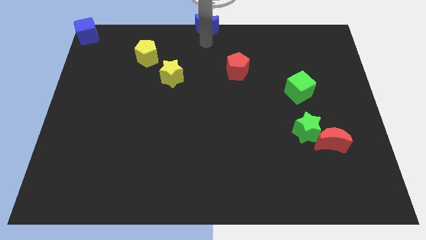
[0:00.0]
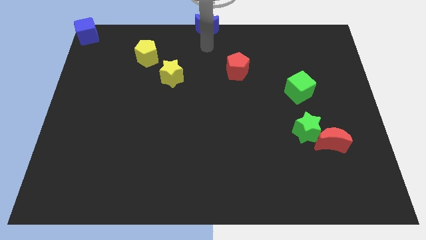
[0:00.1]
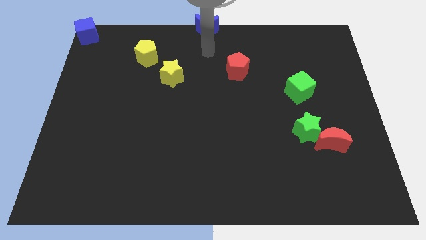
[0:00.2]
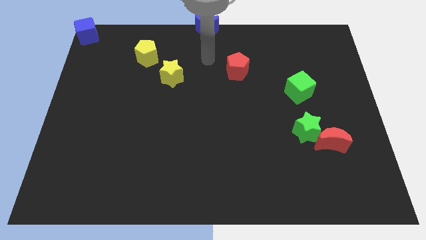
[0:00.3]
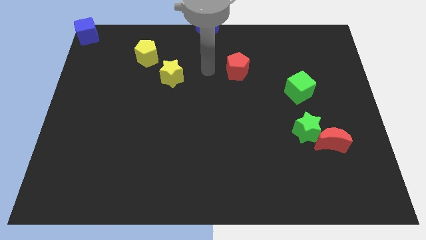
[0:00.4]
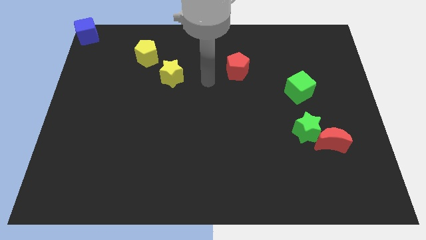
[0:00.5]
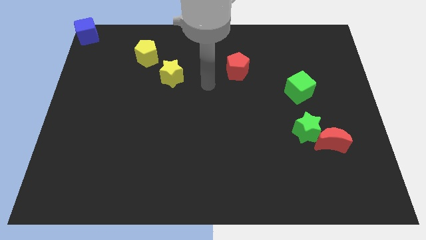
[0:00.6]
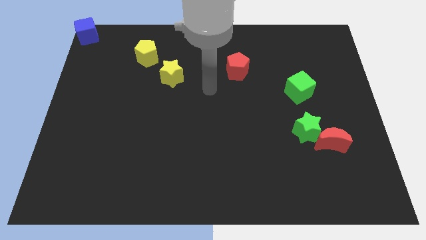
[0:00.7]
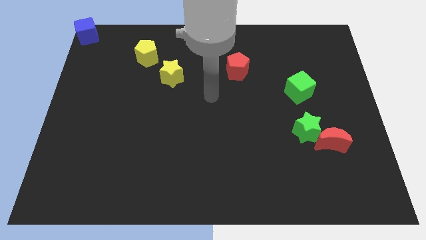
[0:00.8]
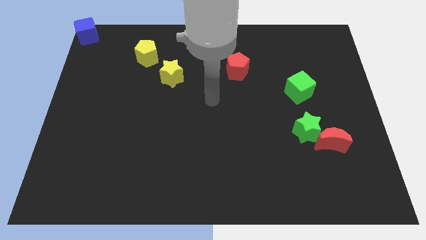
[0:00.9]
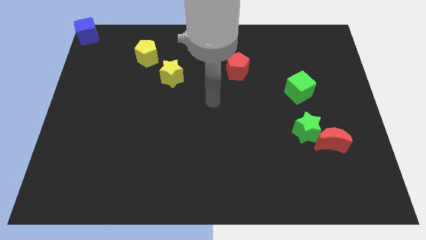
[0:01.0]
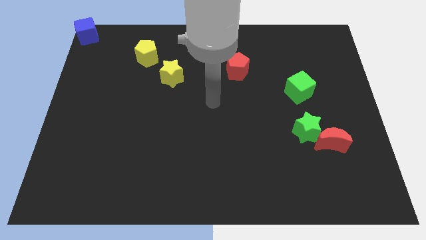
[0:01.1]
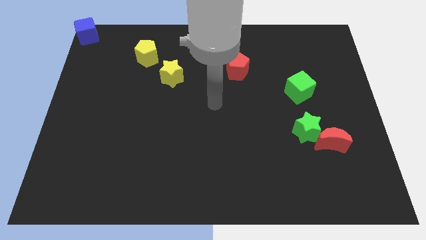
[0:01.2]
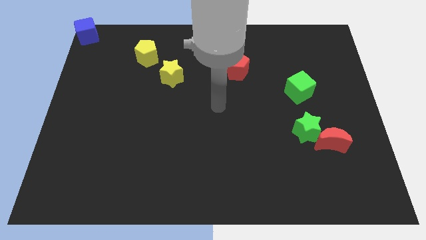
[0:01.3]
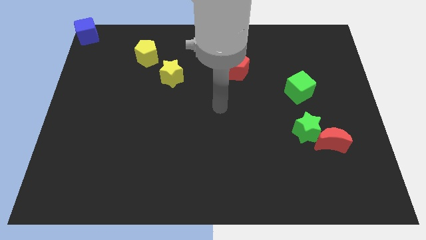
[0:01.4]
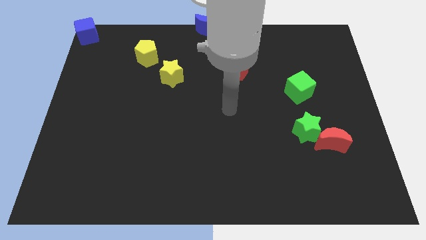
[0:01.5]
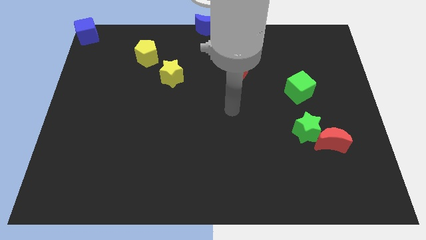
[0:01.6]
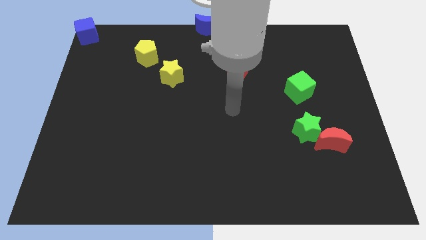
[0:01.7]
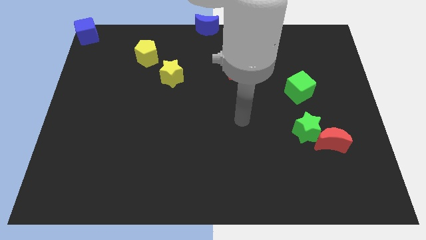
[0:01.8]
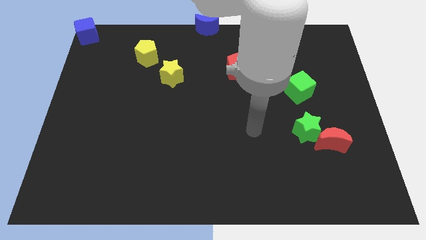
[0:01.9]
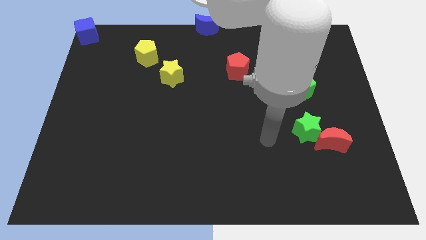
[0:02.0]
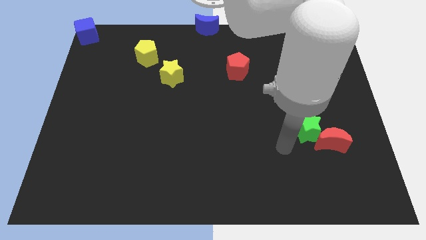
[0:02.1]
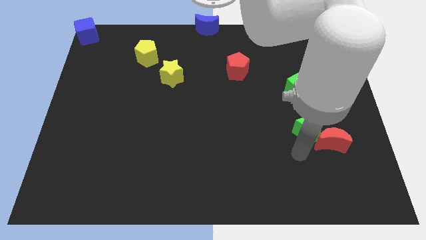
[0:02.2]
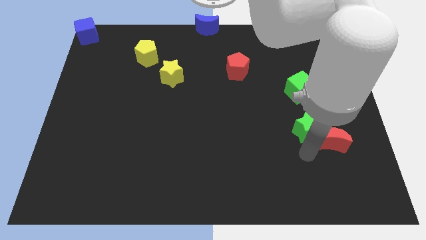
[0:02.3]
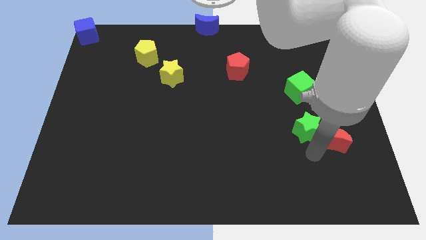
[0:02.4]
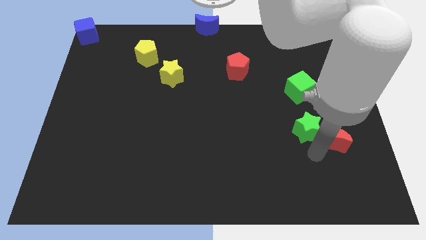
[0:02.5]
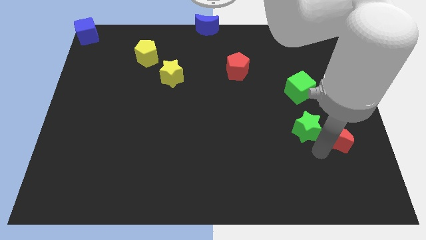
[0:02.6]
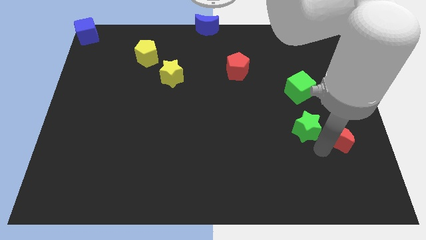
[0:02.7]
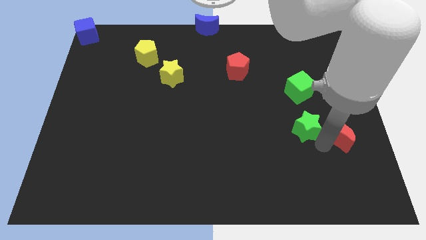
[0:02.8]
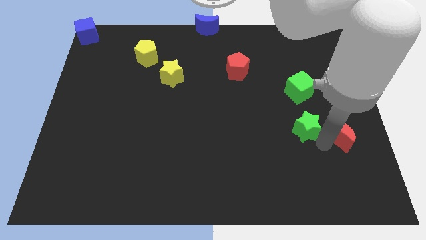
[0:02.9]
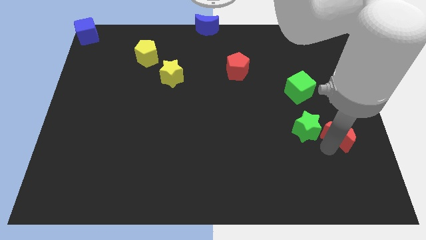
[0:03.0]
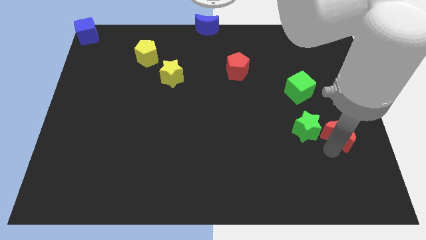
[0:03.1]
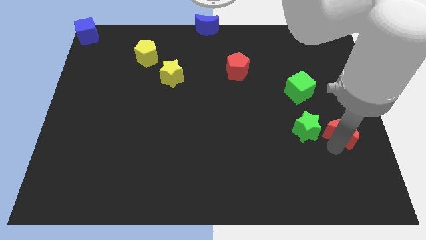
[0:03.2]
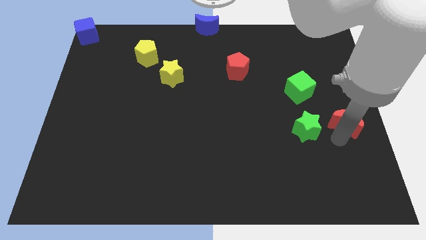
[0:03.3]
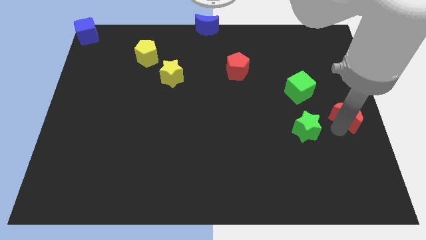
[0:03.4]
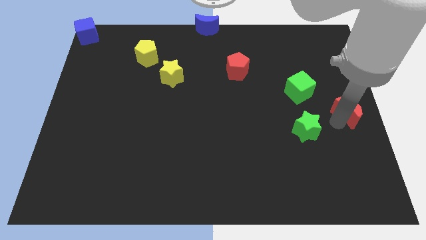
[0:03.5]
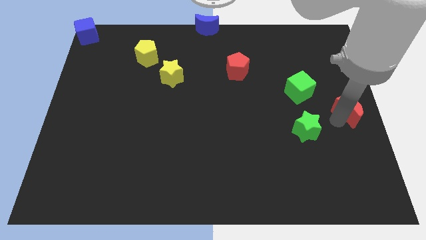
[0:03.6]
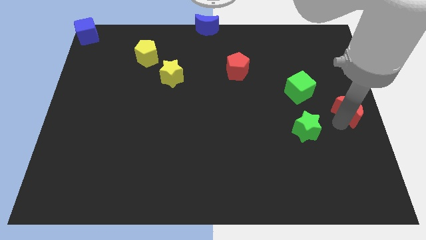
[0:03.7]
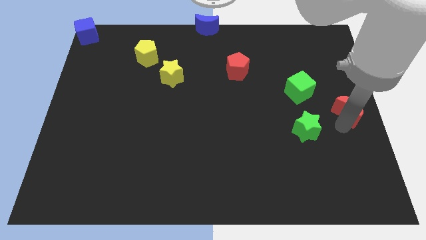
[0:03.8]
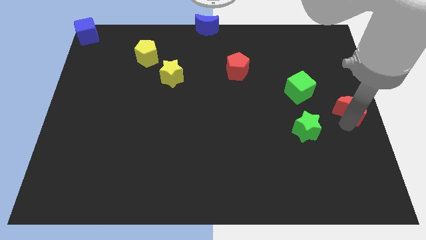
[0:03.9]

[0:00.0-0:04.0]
push the red crescent towards teh right corner center of the board

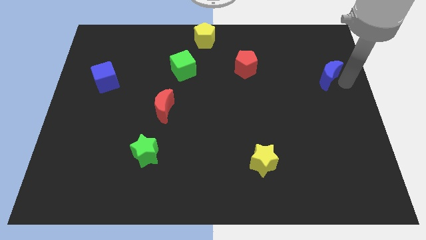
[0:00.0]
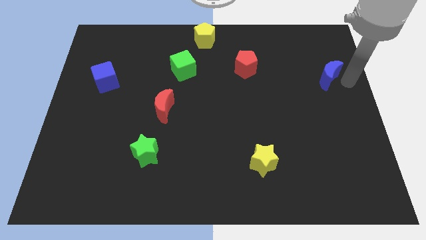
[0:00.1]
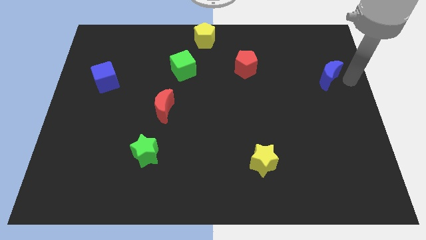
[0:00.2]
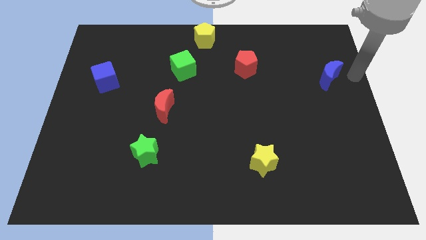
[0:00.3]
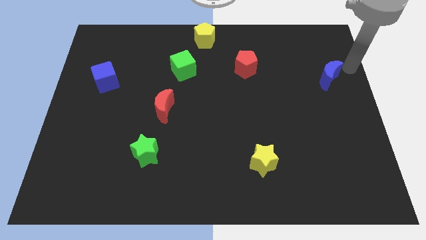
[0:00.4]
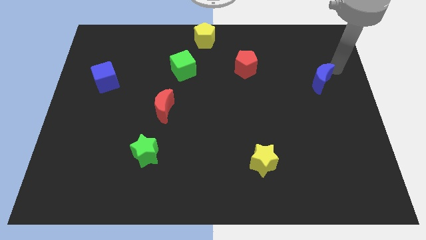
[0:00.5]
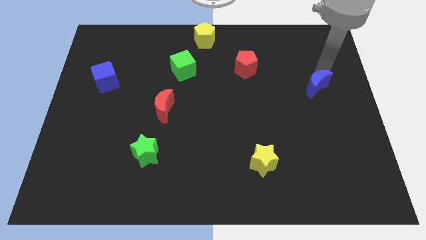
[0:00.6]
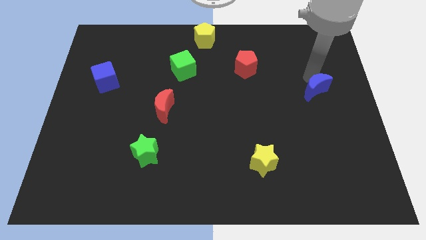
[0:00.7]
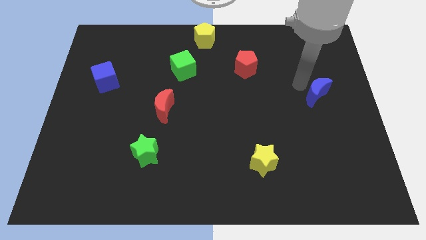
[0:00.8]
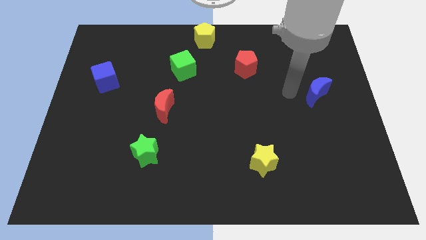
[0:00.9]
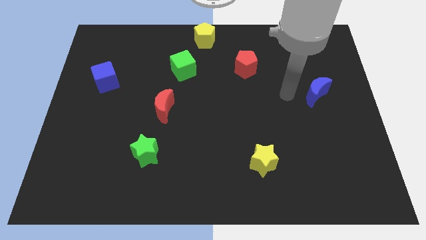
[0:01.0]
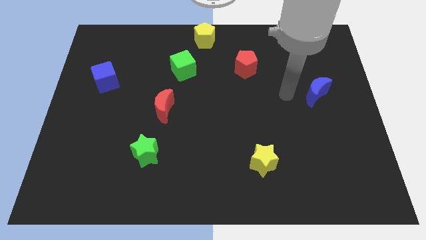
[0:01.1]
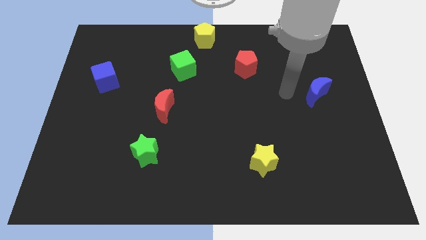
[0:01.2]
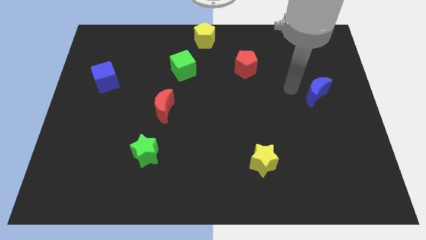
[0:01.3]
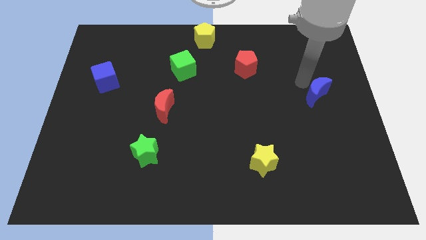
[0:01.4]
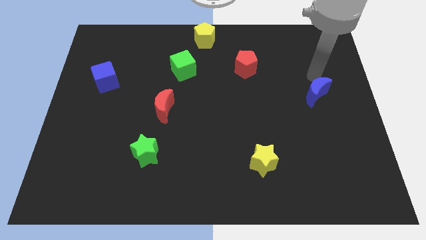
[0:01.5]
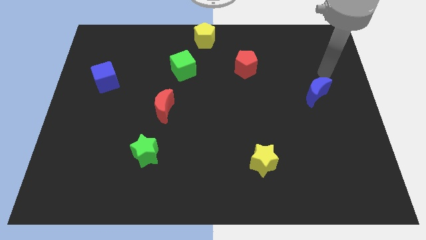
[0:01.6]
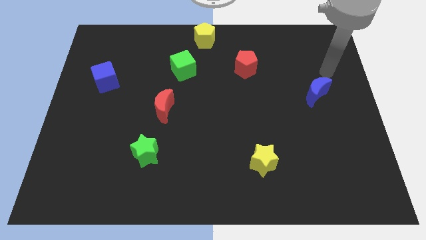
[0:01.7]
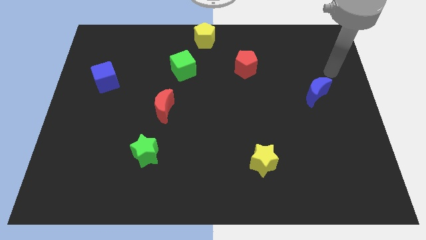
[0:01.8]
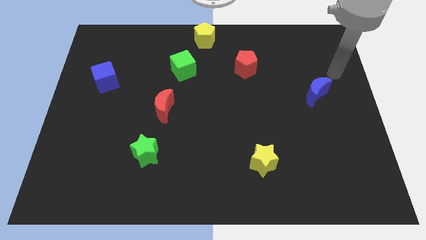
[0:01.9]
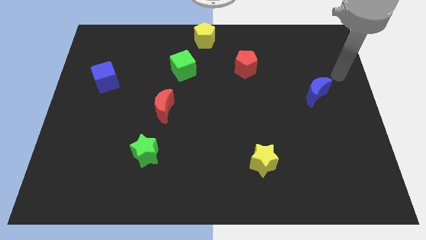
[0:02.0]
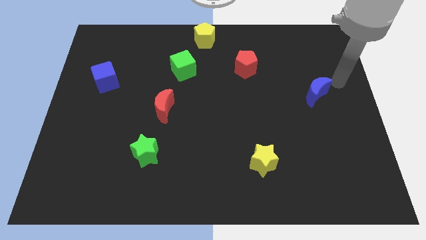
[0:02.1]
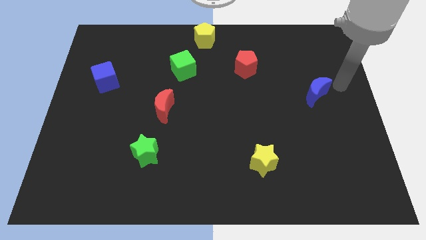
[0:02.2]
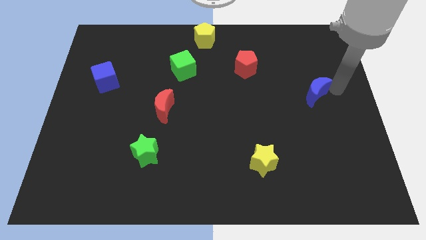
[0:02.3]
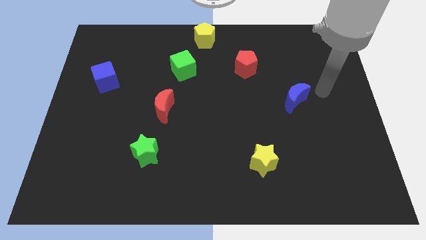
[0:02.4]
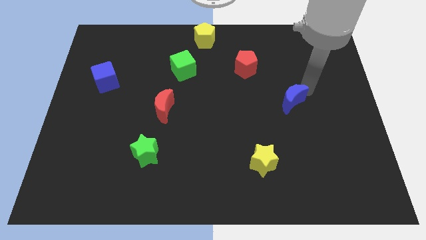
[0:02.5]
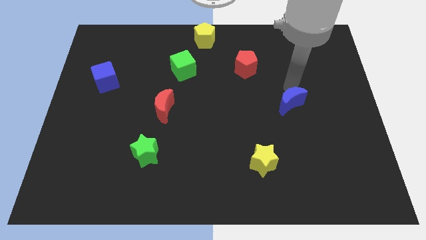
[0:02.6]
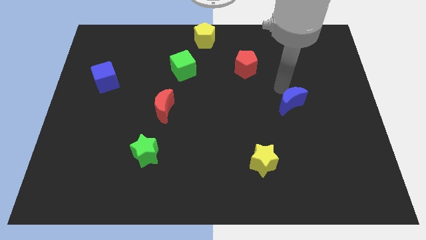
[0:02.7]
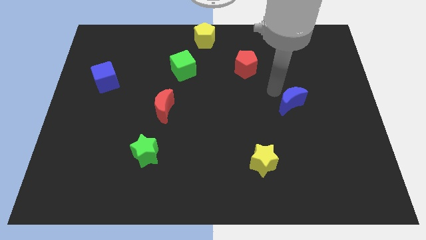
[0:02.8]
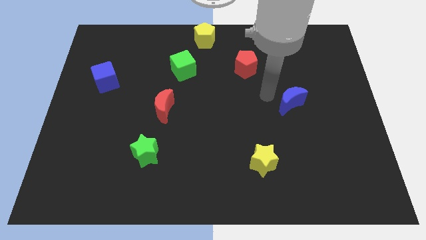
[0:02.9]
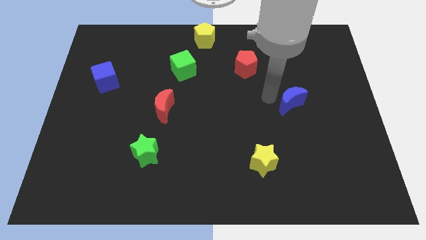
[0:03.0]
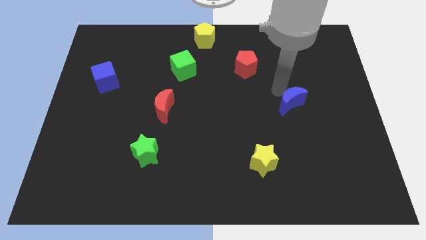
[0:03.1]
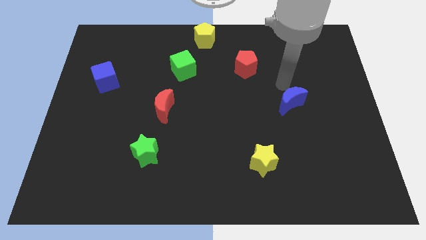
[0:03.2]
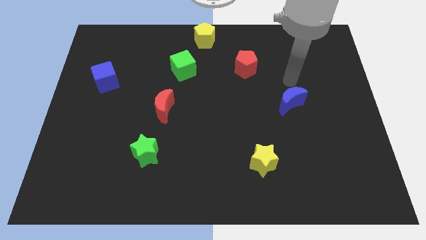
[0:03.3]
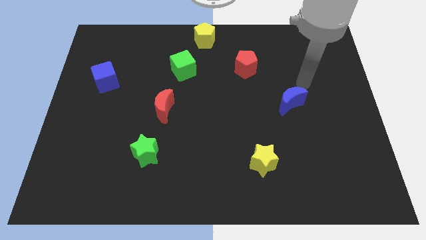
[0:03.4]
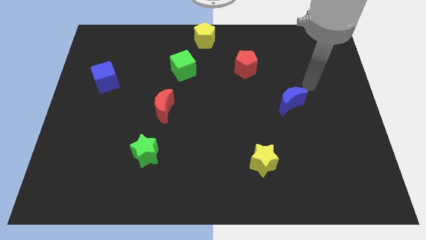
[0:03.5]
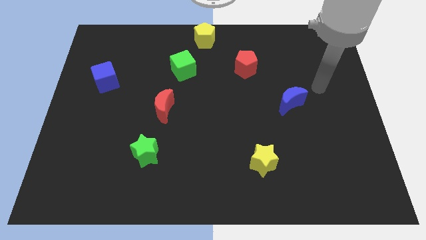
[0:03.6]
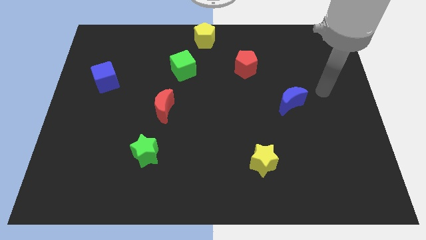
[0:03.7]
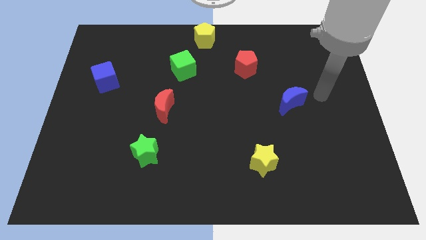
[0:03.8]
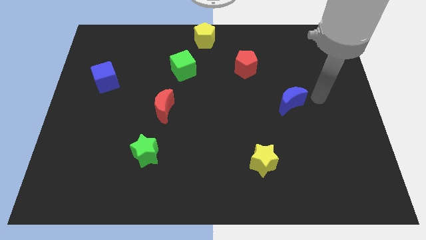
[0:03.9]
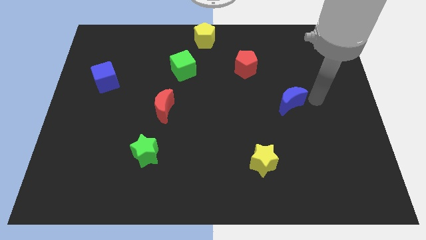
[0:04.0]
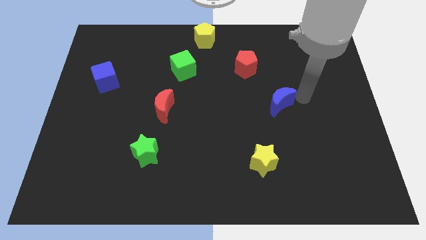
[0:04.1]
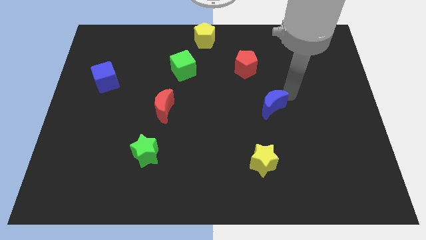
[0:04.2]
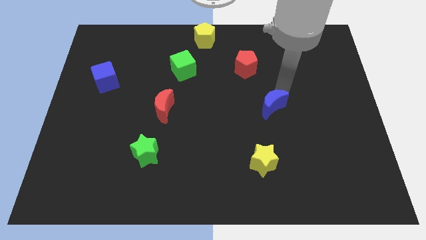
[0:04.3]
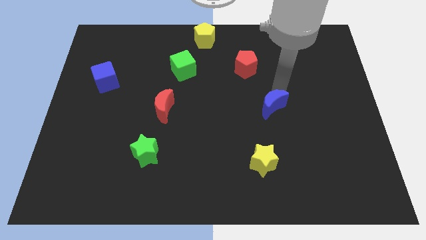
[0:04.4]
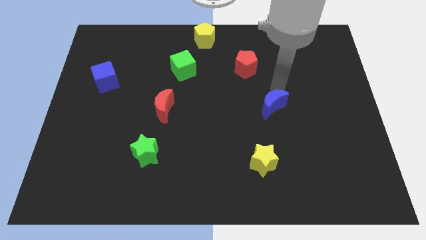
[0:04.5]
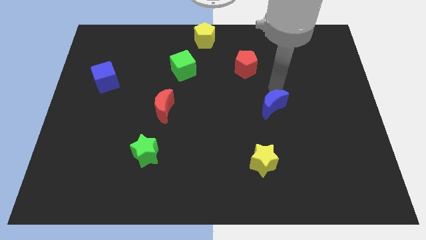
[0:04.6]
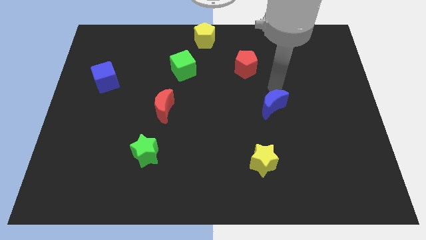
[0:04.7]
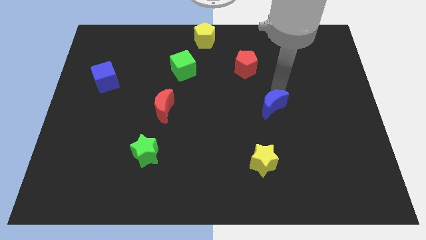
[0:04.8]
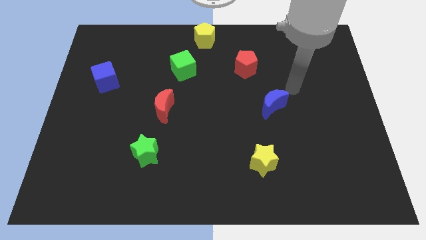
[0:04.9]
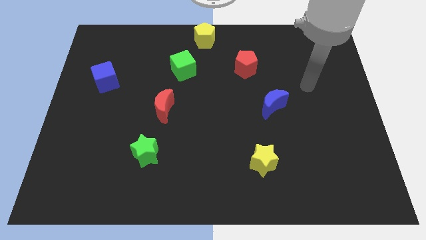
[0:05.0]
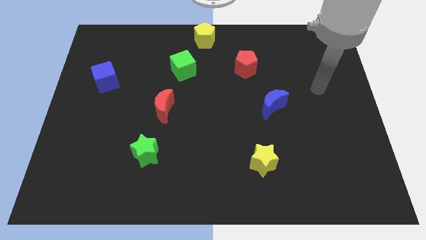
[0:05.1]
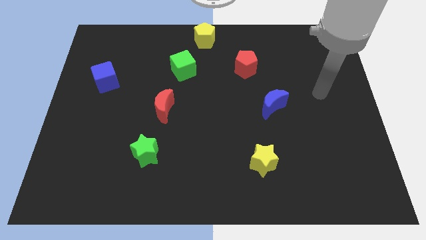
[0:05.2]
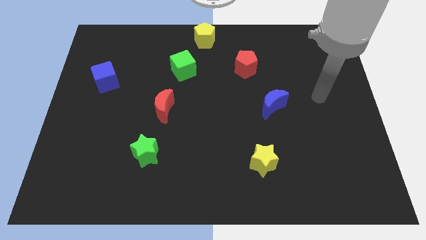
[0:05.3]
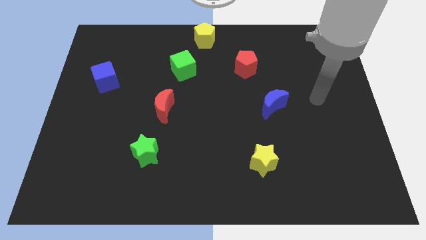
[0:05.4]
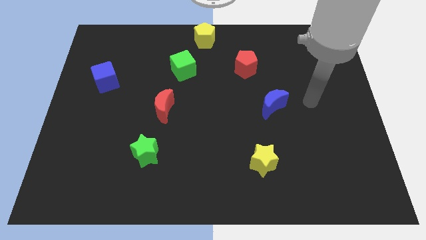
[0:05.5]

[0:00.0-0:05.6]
place the blue crescent above the yellow star
